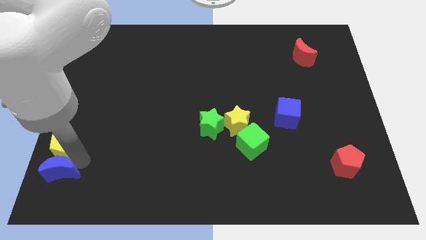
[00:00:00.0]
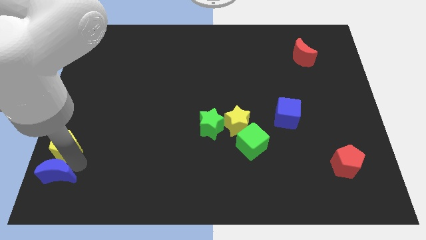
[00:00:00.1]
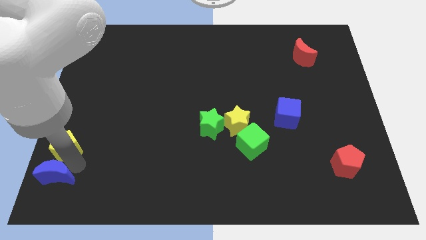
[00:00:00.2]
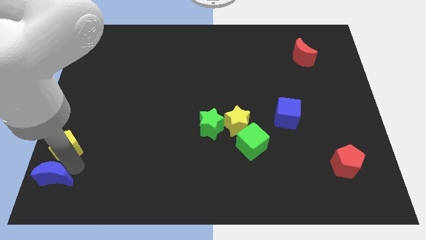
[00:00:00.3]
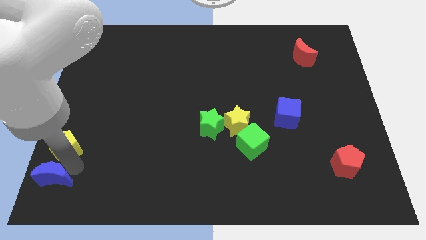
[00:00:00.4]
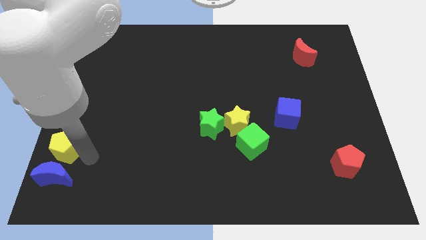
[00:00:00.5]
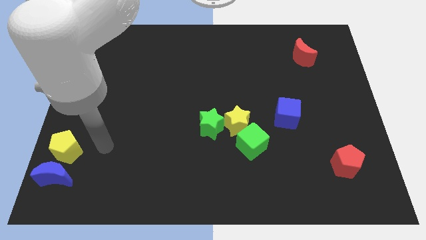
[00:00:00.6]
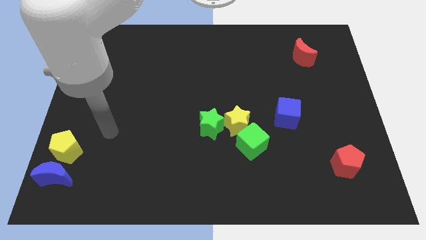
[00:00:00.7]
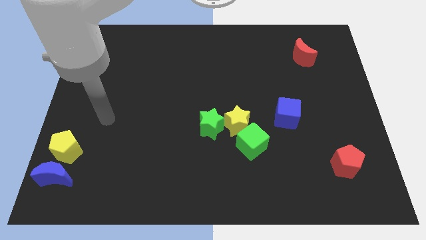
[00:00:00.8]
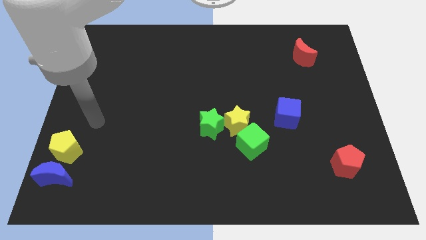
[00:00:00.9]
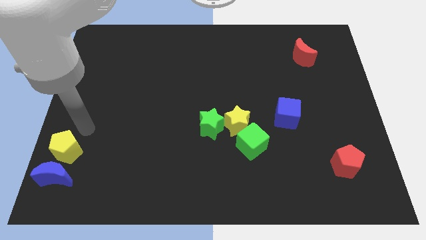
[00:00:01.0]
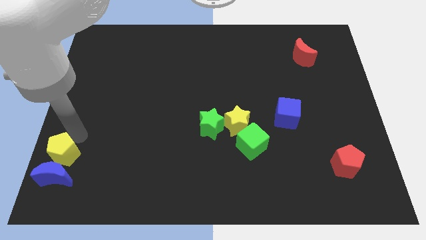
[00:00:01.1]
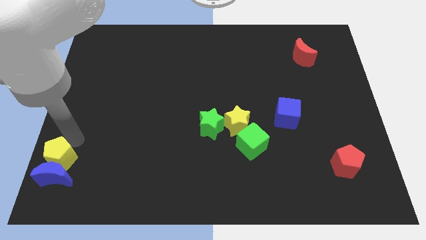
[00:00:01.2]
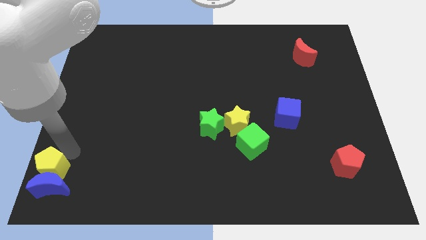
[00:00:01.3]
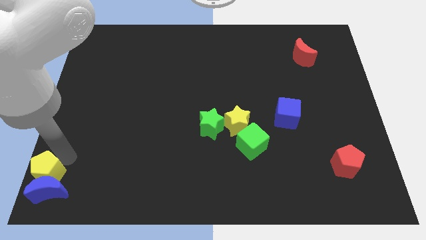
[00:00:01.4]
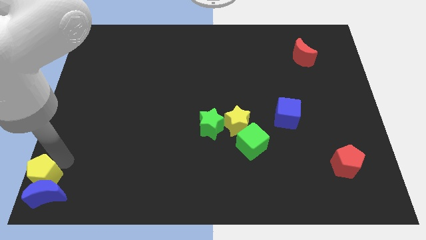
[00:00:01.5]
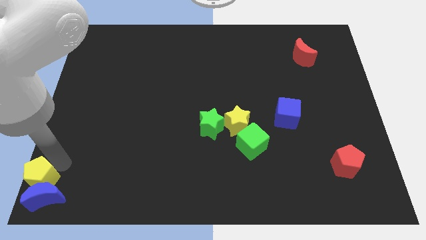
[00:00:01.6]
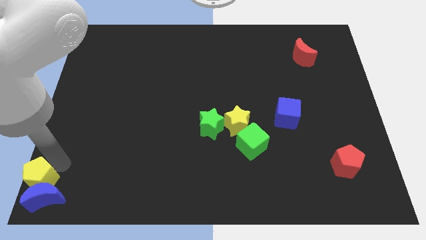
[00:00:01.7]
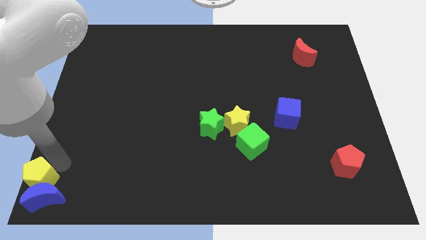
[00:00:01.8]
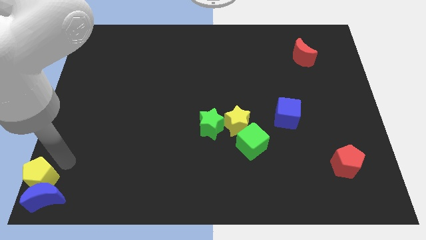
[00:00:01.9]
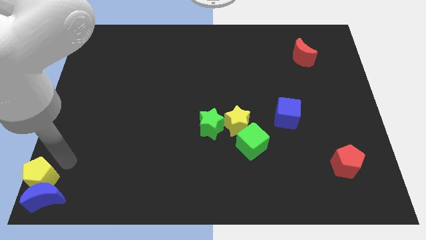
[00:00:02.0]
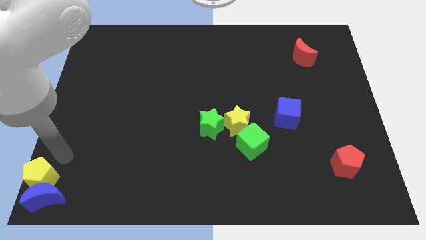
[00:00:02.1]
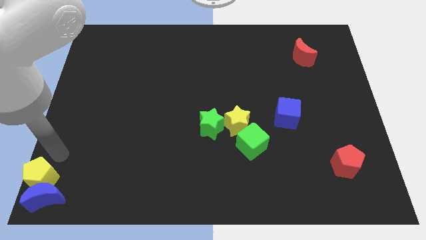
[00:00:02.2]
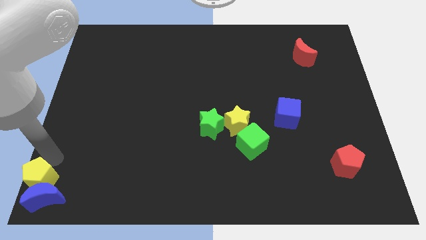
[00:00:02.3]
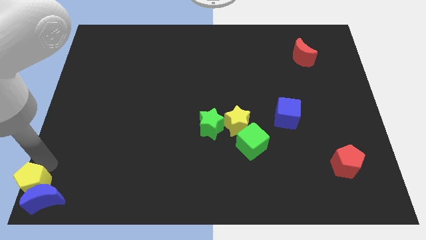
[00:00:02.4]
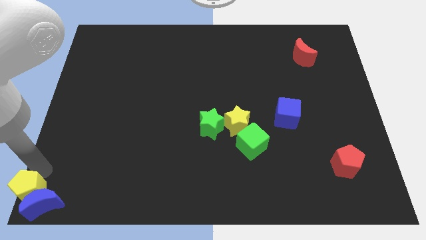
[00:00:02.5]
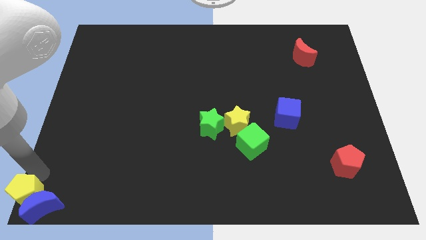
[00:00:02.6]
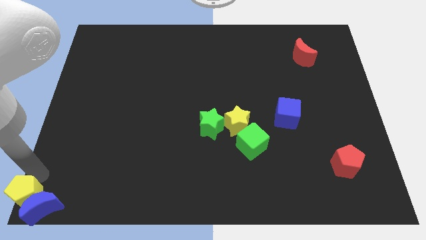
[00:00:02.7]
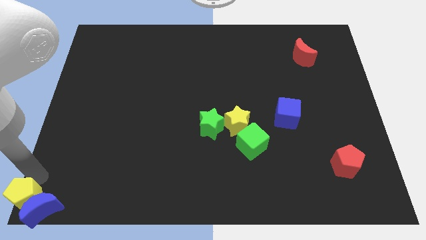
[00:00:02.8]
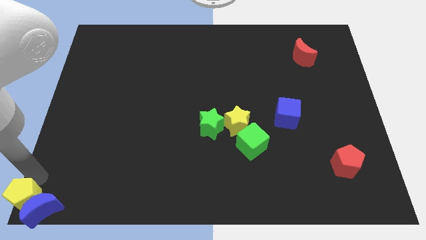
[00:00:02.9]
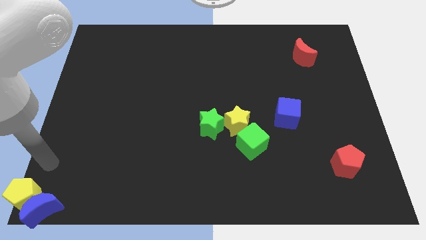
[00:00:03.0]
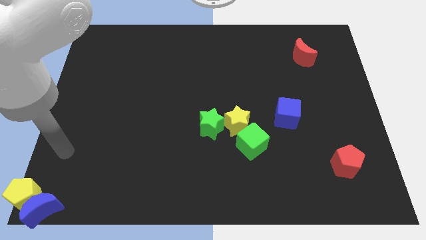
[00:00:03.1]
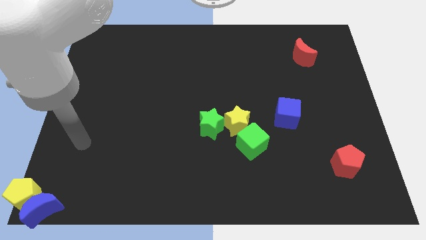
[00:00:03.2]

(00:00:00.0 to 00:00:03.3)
push the yellow pentagon and blue moon together at the bottom left corner of the board

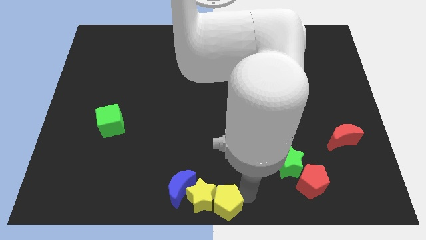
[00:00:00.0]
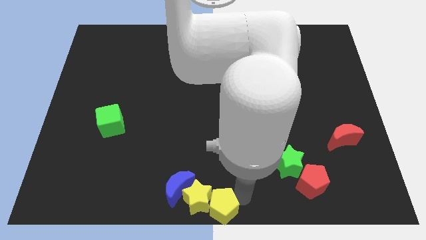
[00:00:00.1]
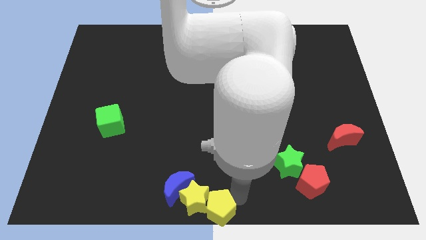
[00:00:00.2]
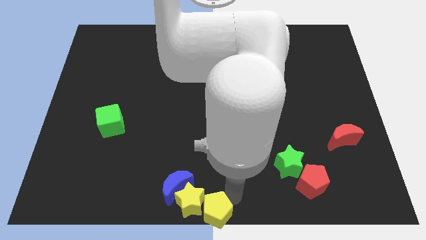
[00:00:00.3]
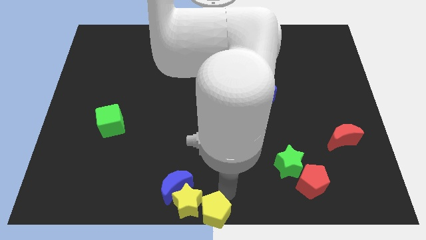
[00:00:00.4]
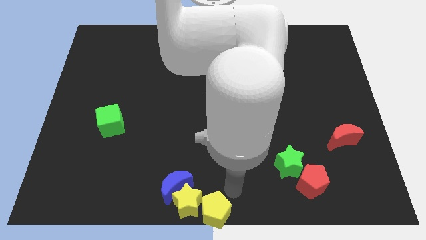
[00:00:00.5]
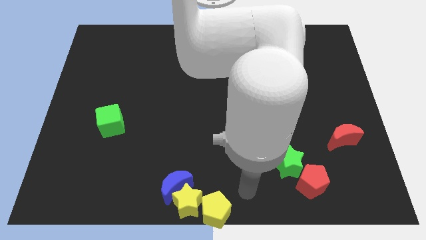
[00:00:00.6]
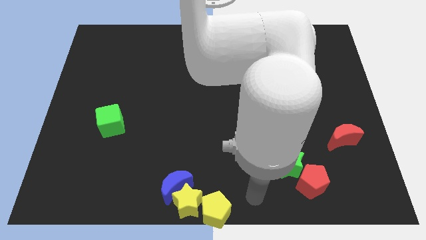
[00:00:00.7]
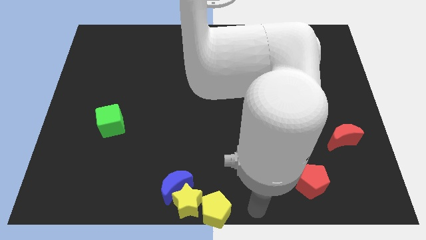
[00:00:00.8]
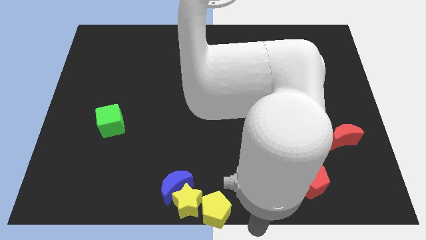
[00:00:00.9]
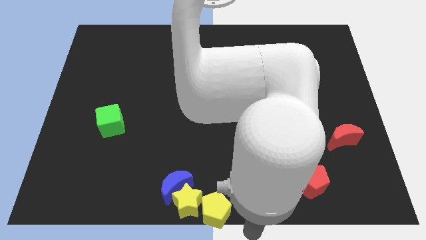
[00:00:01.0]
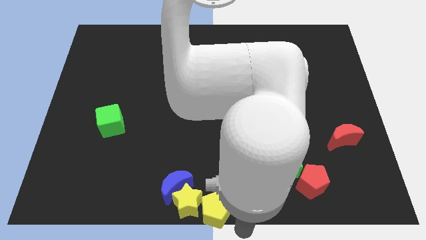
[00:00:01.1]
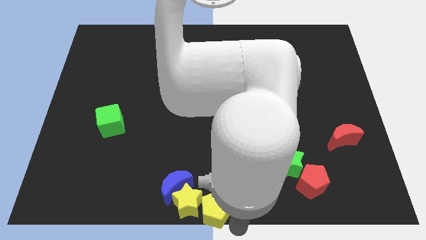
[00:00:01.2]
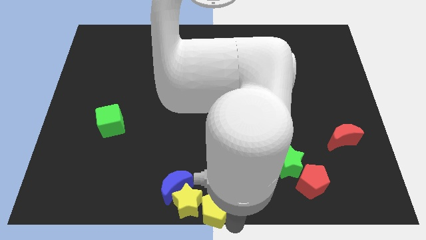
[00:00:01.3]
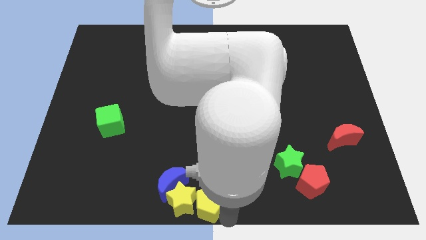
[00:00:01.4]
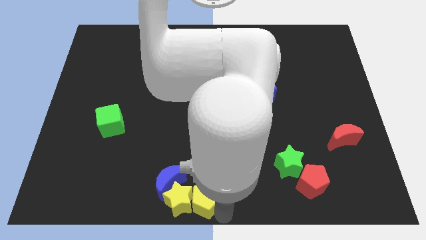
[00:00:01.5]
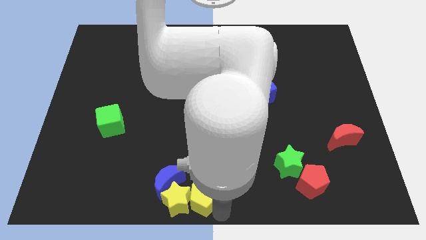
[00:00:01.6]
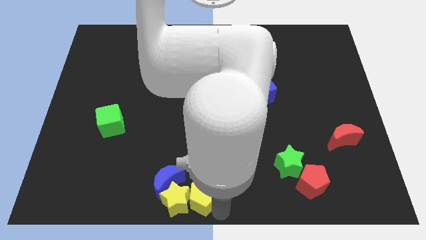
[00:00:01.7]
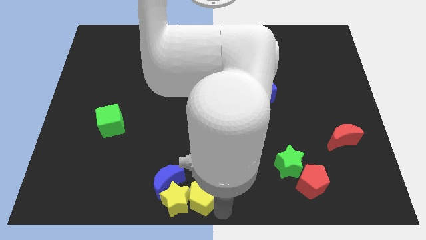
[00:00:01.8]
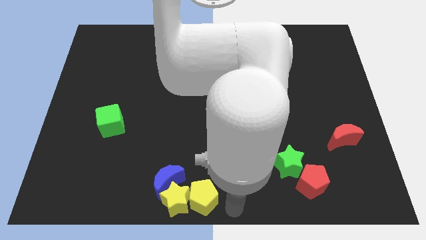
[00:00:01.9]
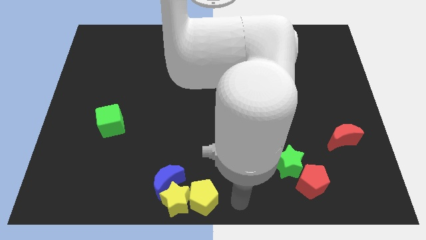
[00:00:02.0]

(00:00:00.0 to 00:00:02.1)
push the yellow blocks and blue moon to the left side

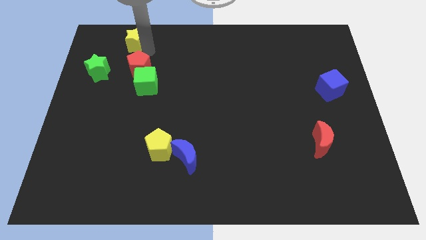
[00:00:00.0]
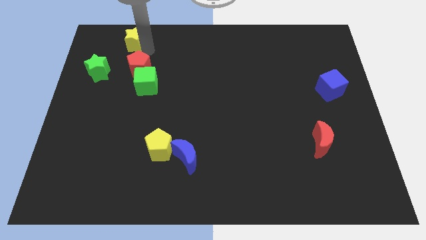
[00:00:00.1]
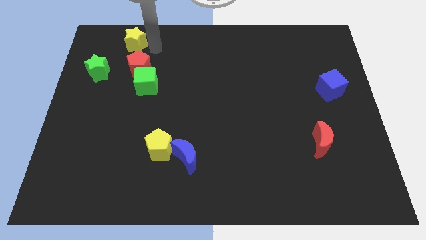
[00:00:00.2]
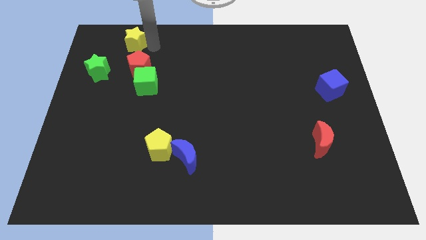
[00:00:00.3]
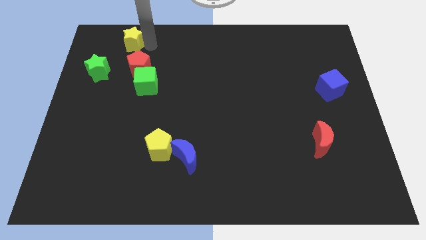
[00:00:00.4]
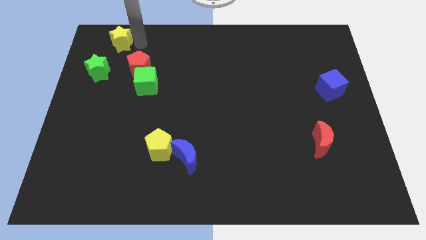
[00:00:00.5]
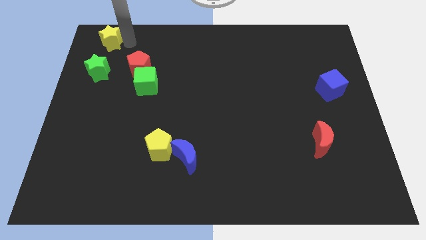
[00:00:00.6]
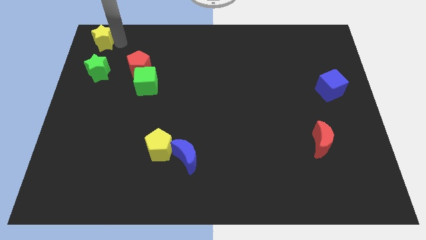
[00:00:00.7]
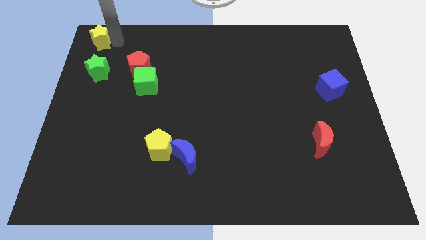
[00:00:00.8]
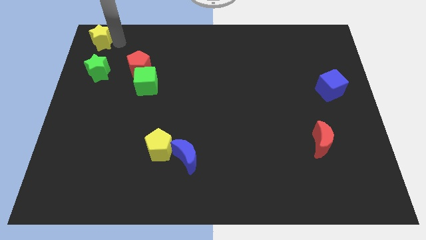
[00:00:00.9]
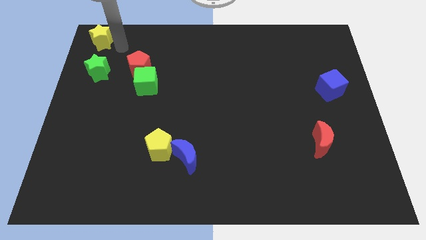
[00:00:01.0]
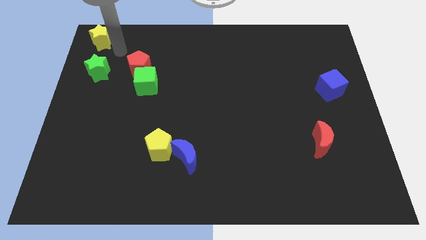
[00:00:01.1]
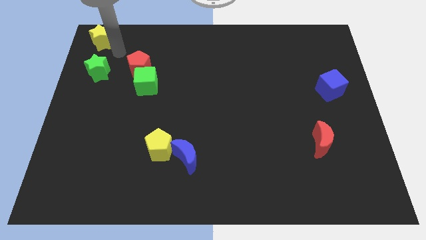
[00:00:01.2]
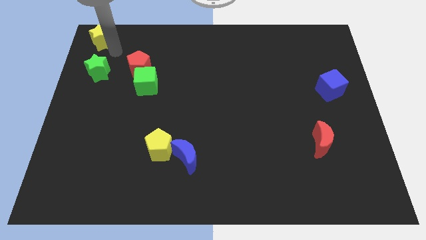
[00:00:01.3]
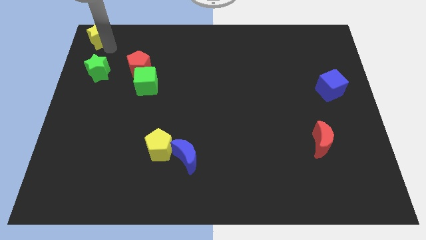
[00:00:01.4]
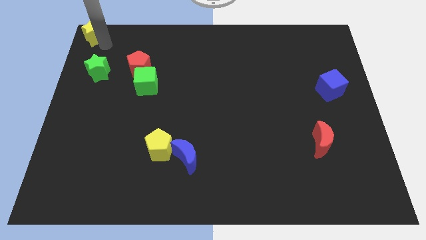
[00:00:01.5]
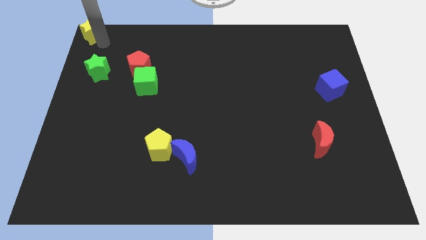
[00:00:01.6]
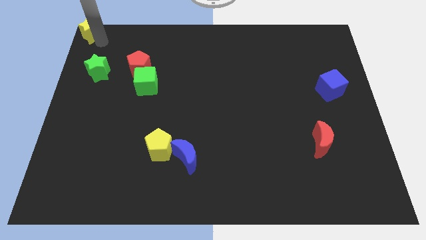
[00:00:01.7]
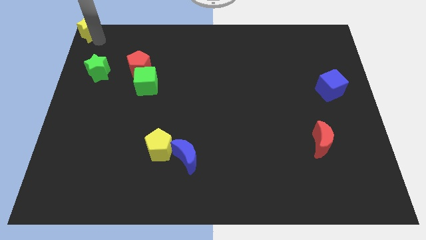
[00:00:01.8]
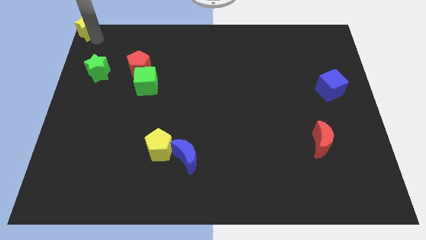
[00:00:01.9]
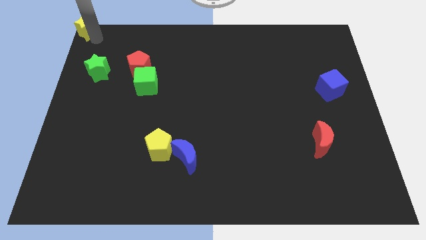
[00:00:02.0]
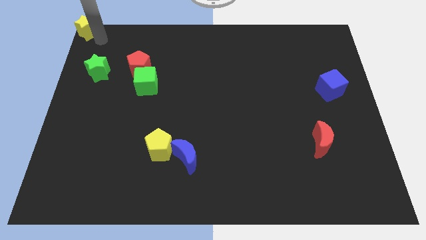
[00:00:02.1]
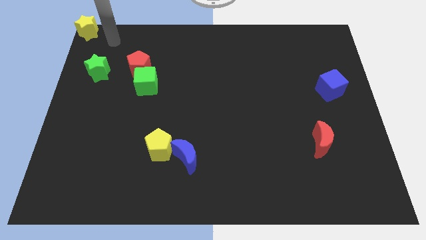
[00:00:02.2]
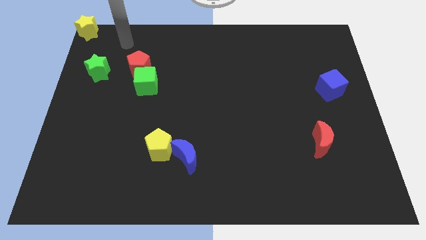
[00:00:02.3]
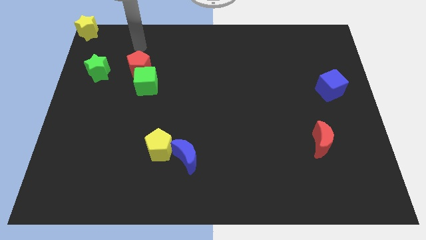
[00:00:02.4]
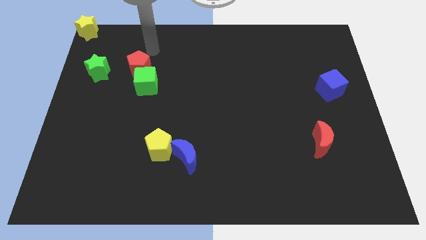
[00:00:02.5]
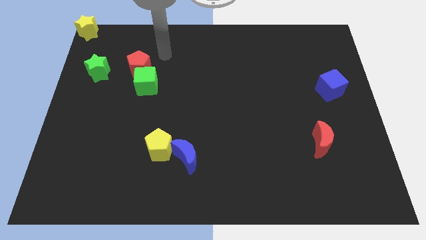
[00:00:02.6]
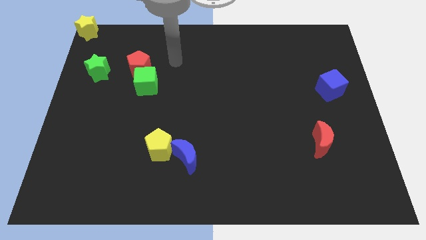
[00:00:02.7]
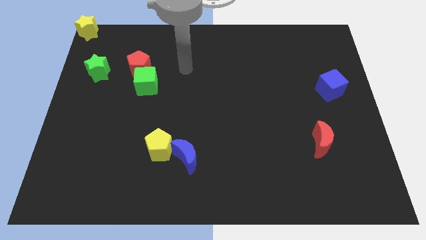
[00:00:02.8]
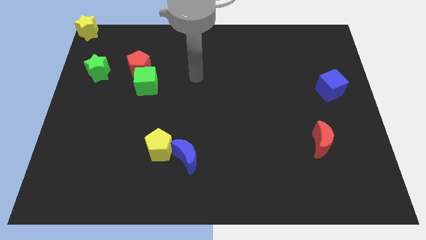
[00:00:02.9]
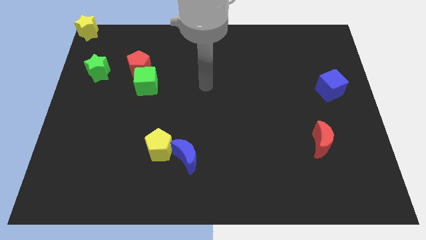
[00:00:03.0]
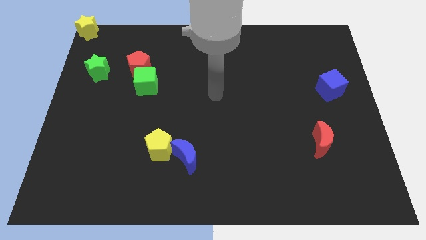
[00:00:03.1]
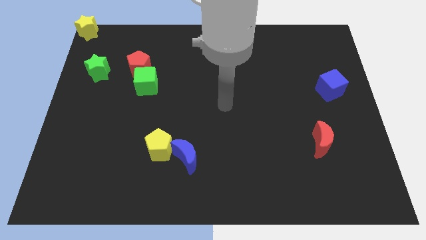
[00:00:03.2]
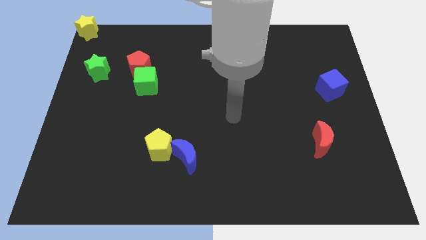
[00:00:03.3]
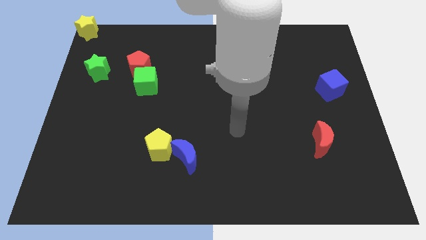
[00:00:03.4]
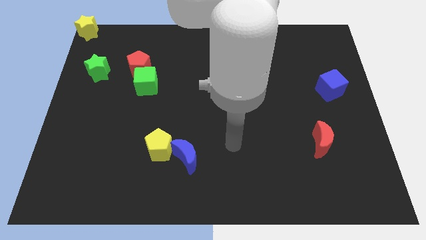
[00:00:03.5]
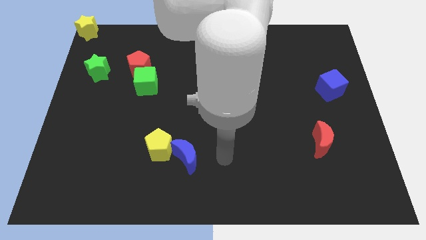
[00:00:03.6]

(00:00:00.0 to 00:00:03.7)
place the yellow star towards the top left corner of the board
